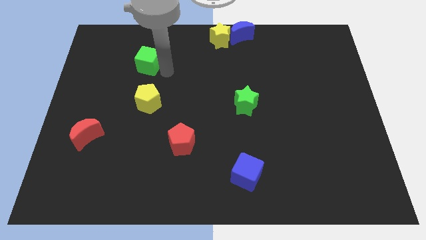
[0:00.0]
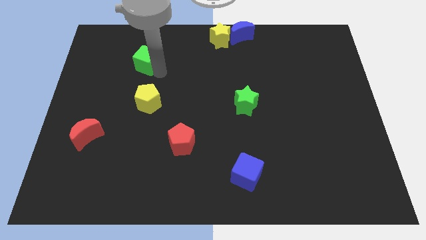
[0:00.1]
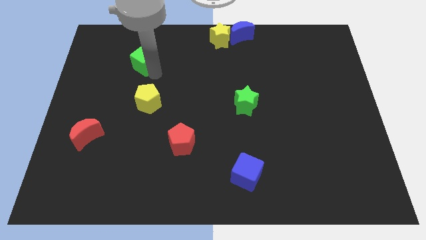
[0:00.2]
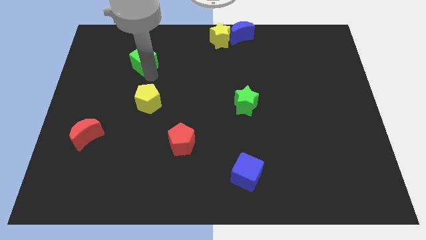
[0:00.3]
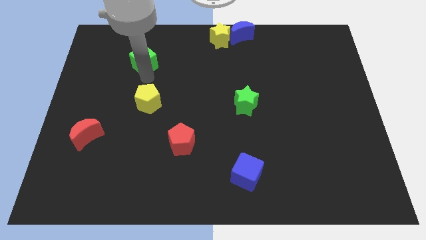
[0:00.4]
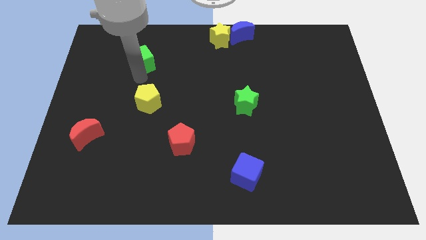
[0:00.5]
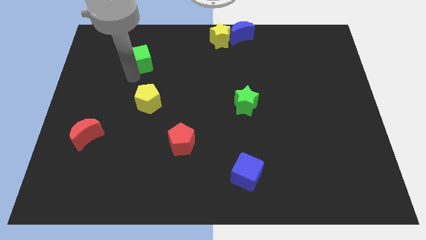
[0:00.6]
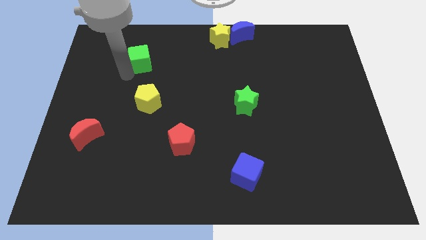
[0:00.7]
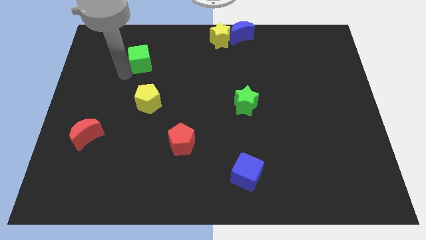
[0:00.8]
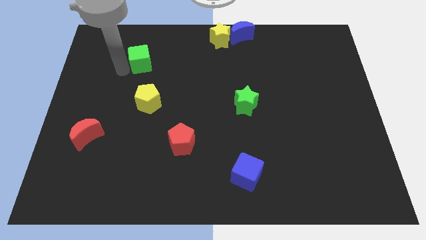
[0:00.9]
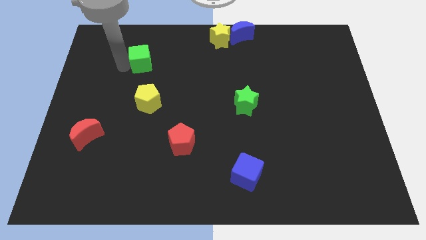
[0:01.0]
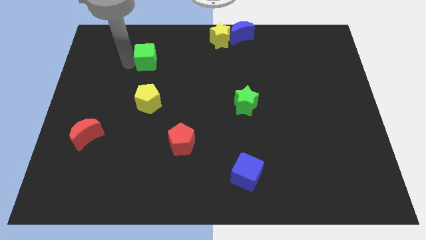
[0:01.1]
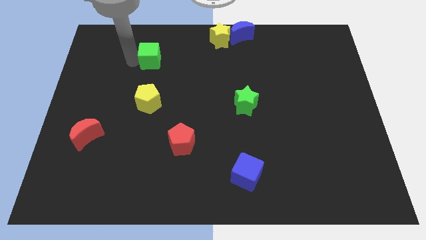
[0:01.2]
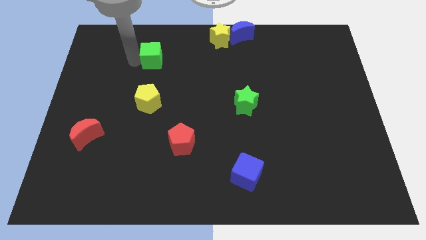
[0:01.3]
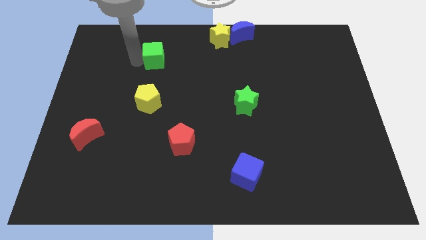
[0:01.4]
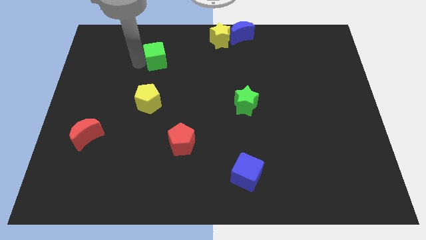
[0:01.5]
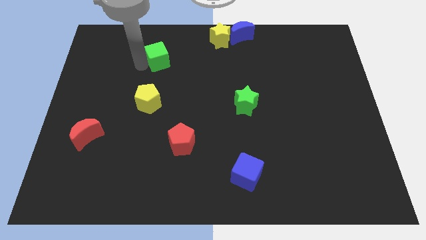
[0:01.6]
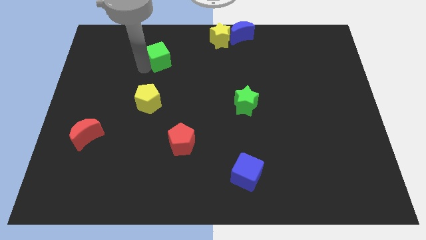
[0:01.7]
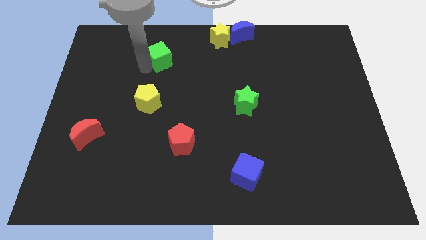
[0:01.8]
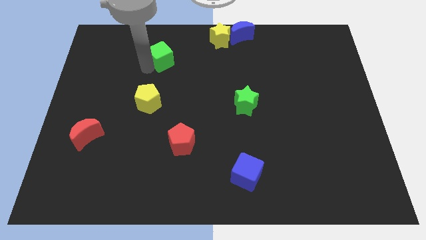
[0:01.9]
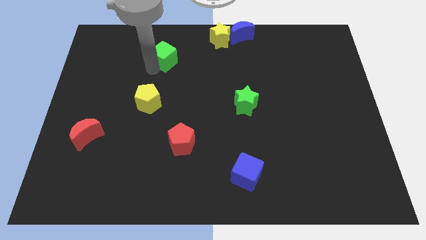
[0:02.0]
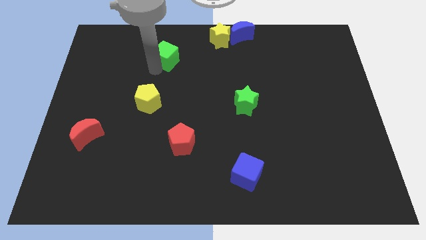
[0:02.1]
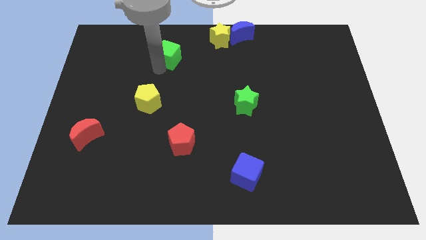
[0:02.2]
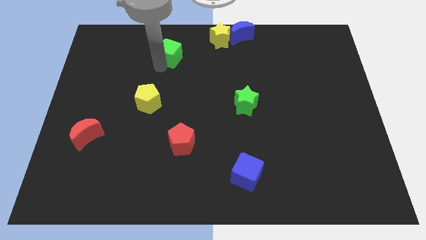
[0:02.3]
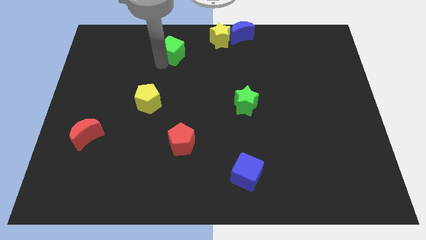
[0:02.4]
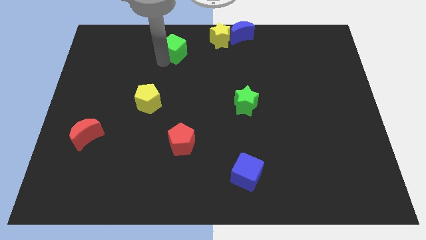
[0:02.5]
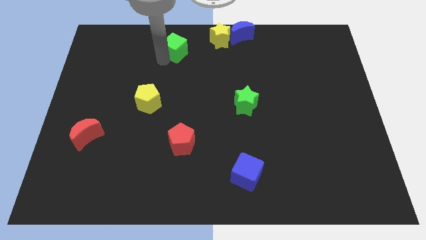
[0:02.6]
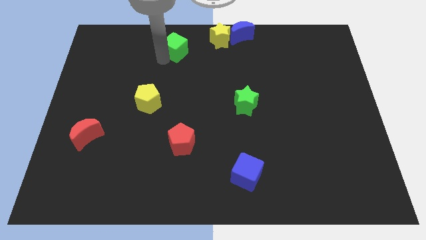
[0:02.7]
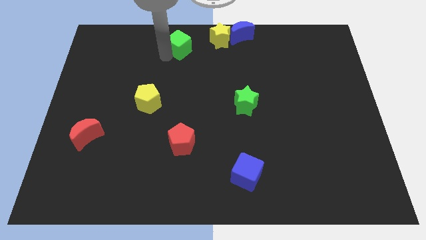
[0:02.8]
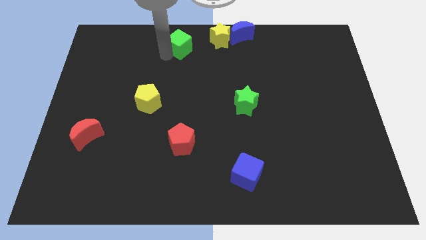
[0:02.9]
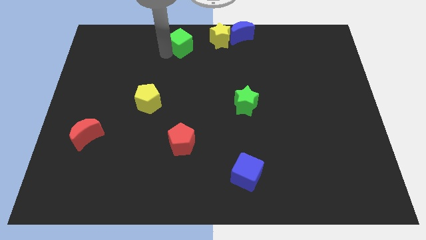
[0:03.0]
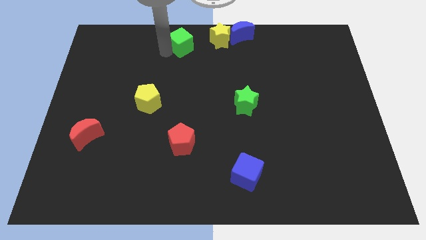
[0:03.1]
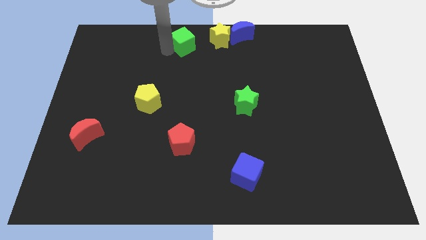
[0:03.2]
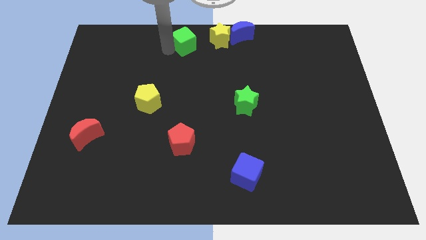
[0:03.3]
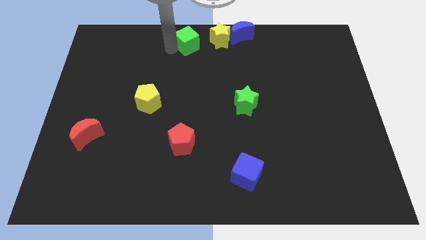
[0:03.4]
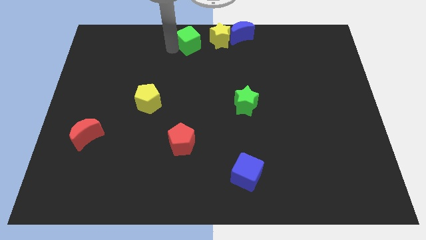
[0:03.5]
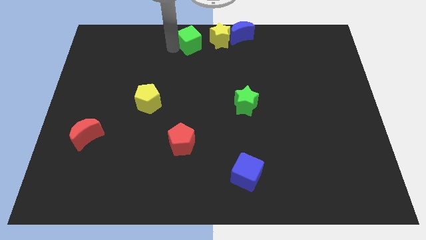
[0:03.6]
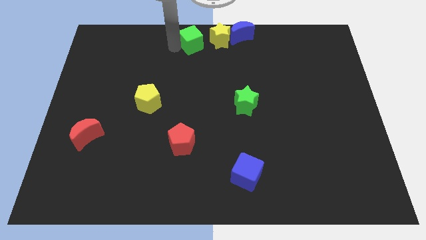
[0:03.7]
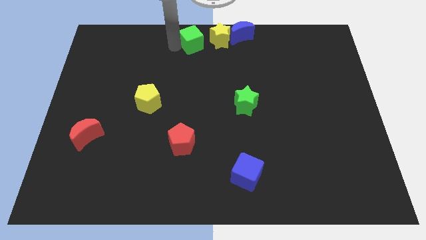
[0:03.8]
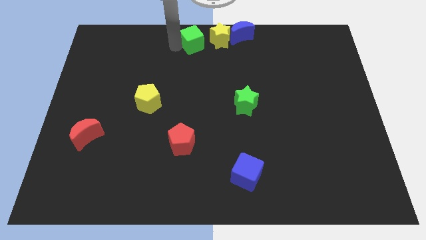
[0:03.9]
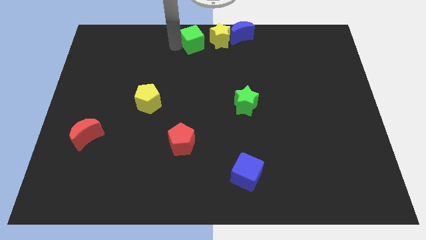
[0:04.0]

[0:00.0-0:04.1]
move the green cube towards the yellow star

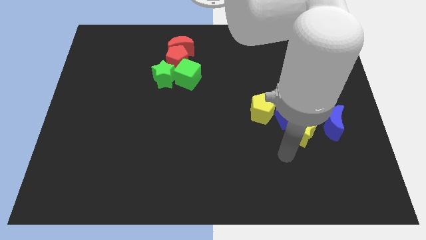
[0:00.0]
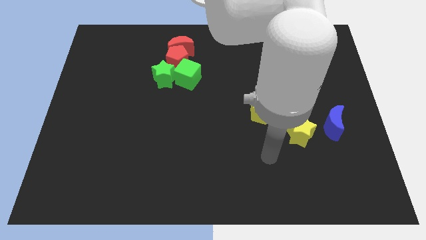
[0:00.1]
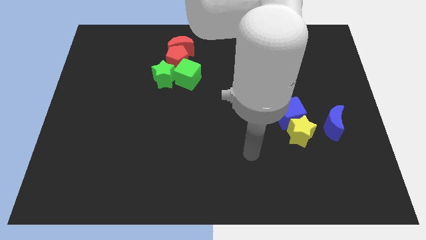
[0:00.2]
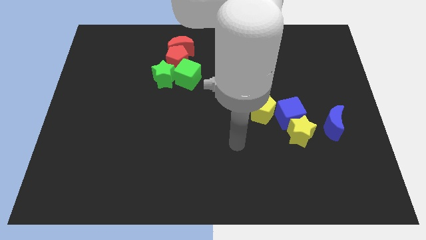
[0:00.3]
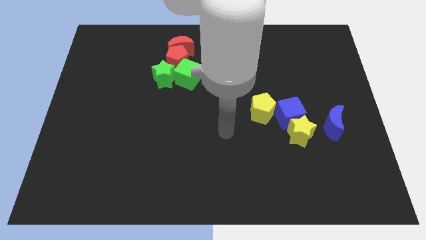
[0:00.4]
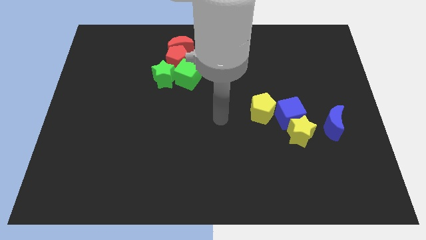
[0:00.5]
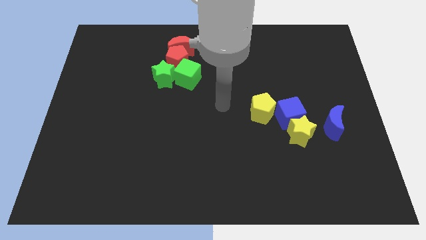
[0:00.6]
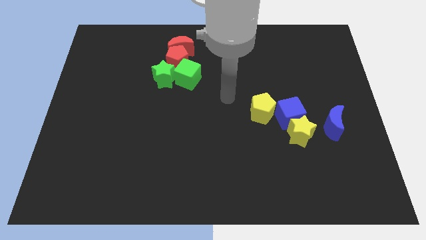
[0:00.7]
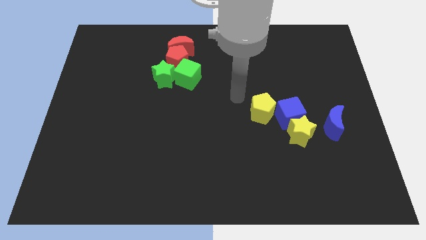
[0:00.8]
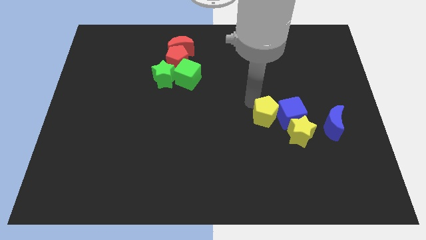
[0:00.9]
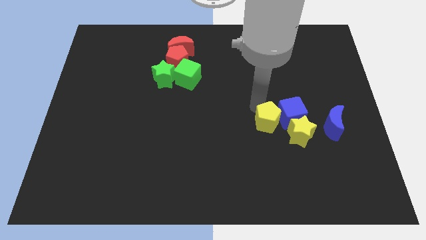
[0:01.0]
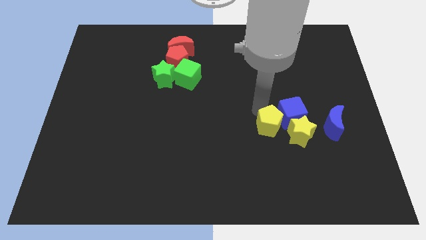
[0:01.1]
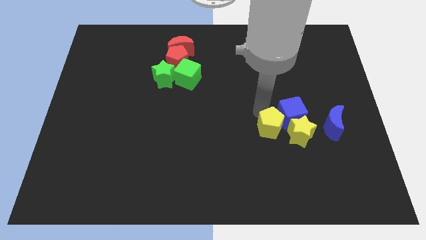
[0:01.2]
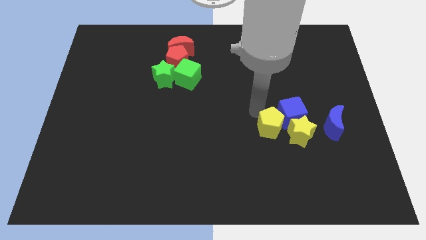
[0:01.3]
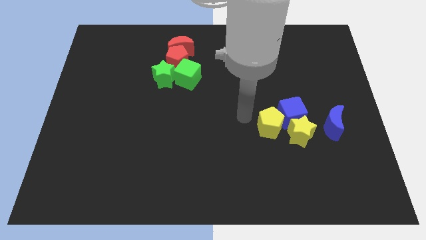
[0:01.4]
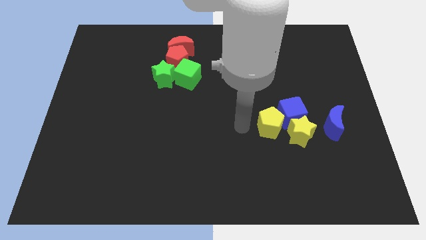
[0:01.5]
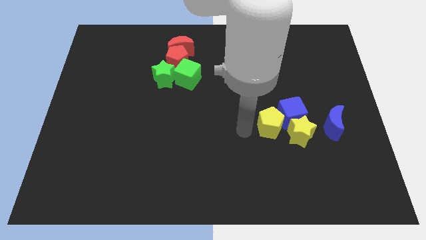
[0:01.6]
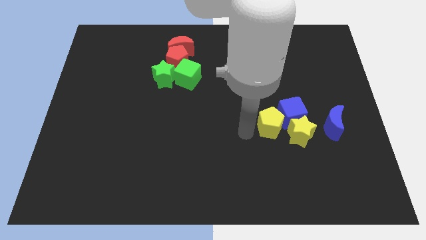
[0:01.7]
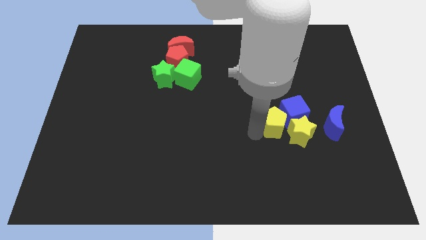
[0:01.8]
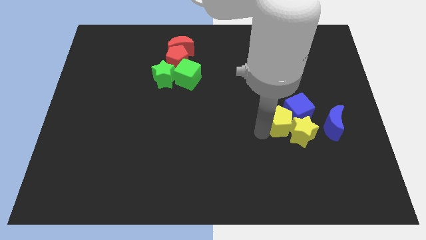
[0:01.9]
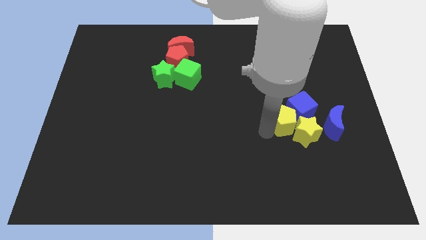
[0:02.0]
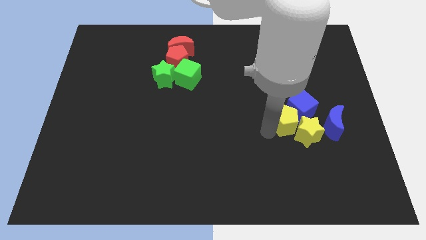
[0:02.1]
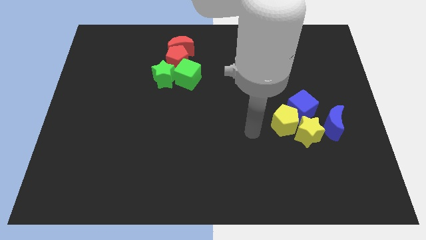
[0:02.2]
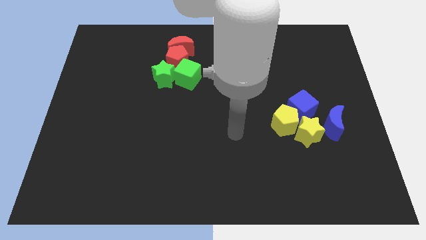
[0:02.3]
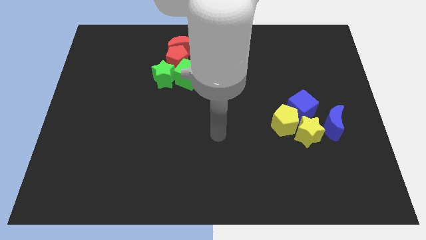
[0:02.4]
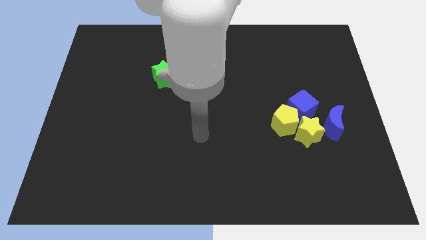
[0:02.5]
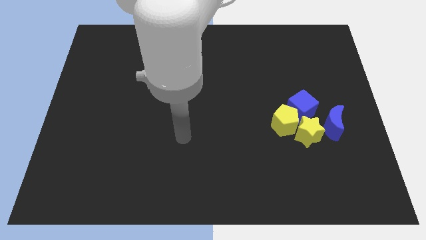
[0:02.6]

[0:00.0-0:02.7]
group up yellow and blue blocks together

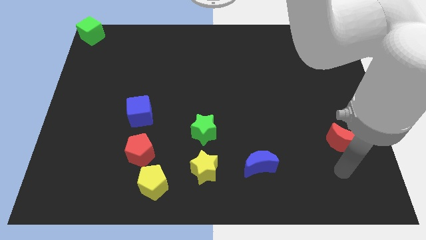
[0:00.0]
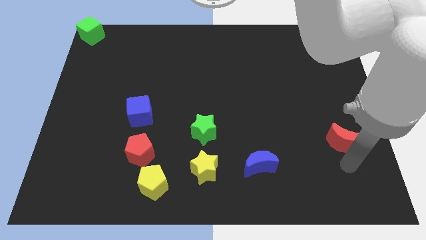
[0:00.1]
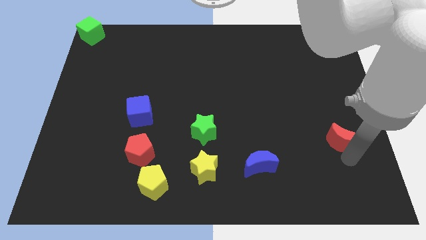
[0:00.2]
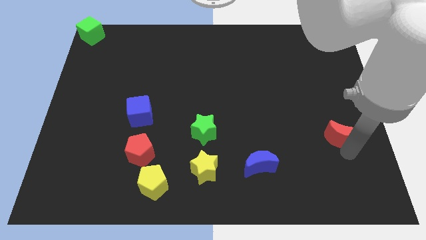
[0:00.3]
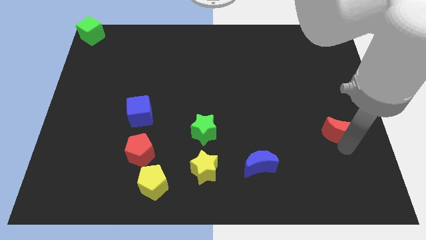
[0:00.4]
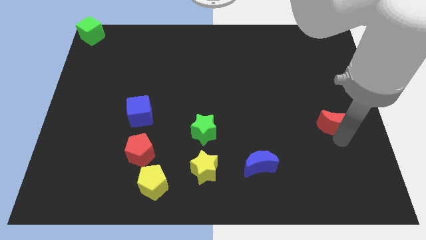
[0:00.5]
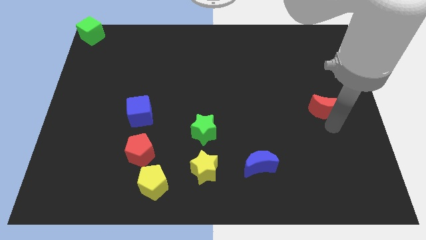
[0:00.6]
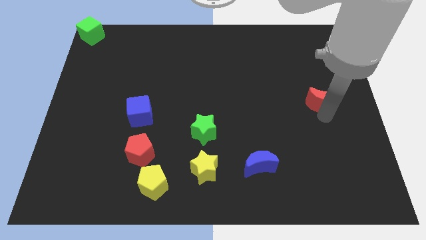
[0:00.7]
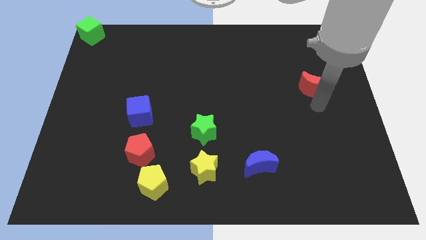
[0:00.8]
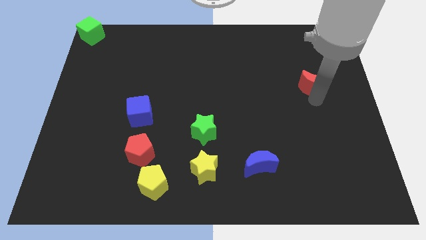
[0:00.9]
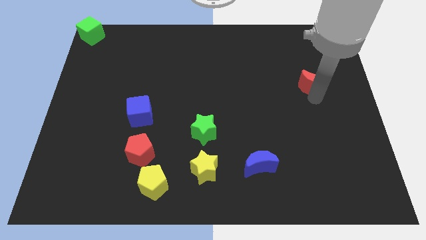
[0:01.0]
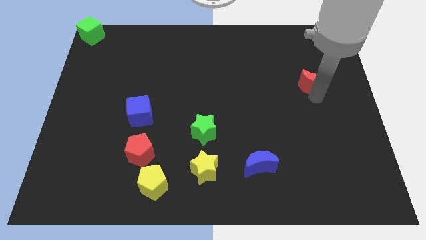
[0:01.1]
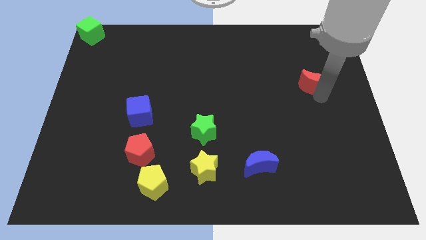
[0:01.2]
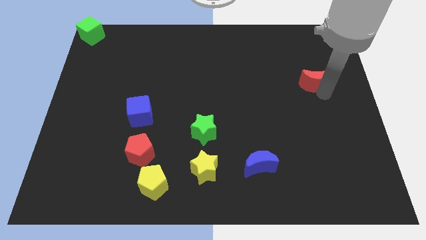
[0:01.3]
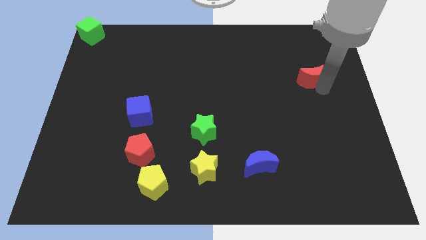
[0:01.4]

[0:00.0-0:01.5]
drag the red moon towards the top center

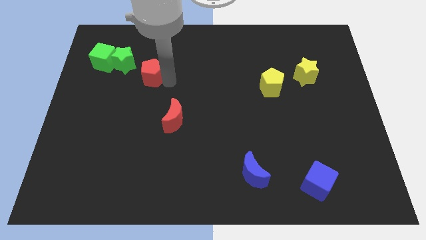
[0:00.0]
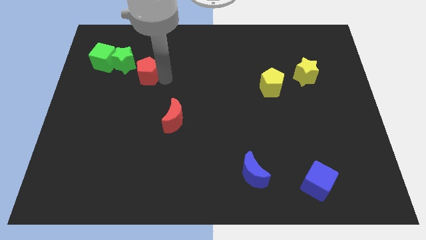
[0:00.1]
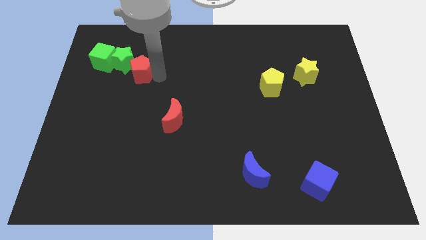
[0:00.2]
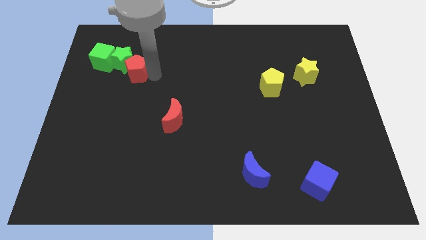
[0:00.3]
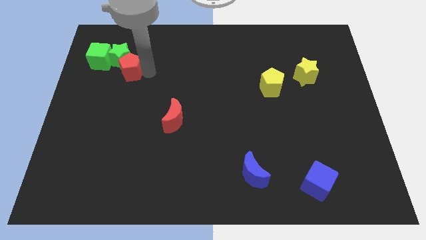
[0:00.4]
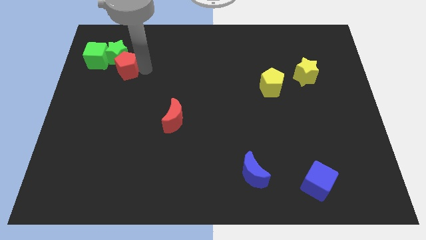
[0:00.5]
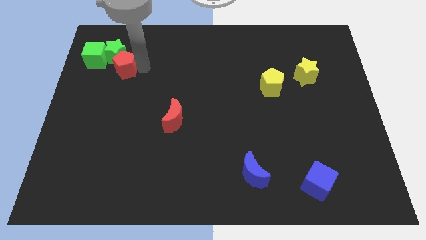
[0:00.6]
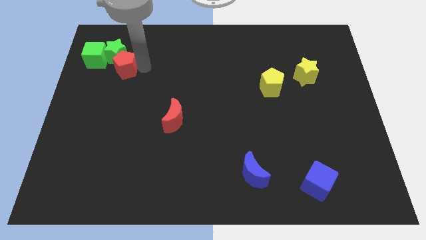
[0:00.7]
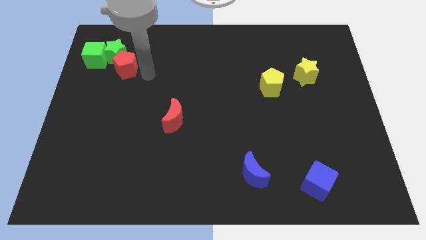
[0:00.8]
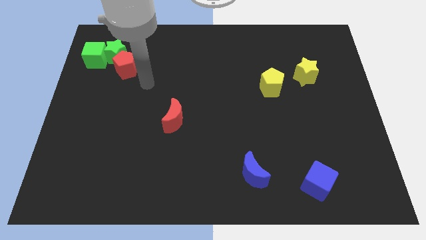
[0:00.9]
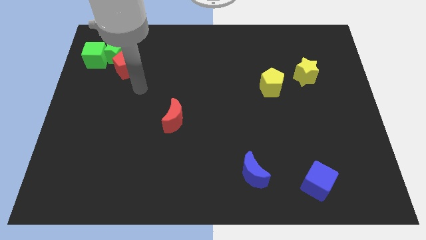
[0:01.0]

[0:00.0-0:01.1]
push the red pentagon into the green star
